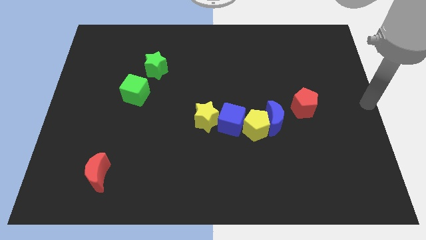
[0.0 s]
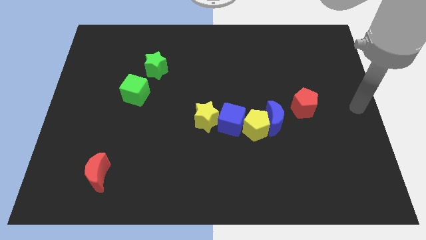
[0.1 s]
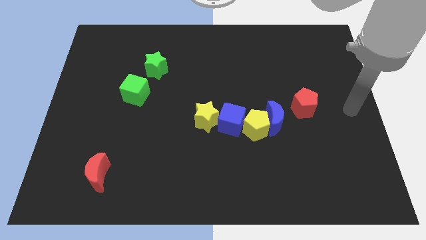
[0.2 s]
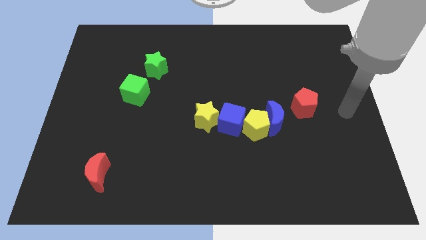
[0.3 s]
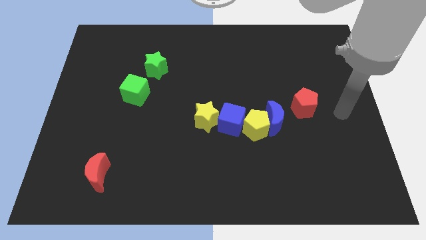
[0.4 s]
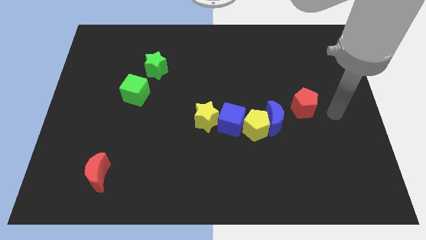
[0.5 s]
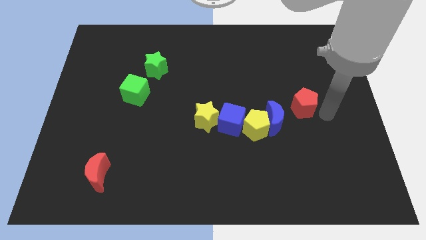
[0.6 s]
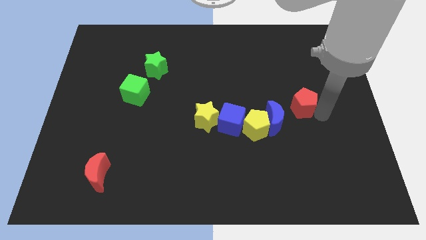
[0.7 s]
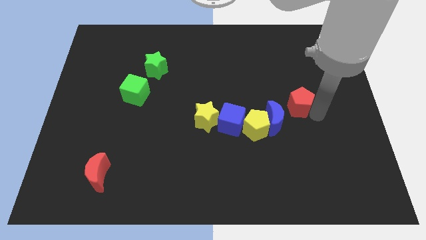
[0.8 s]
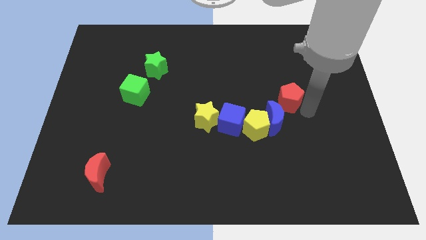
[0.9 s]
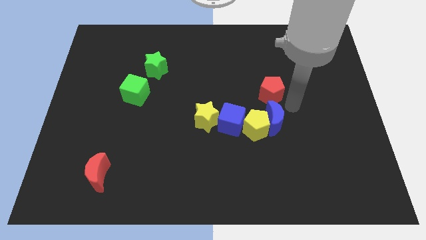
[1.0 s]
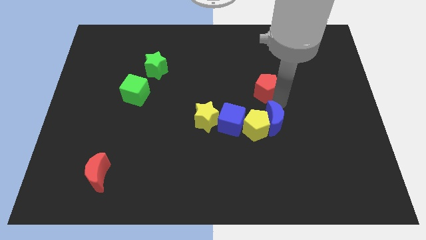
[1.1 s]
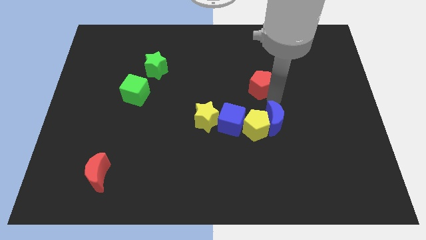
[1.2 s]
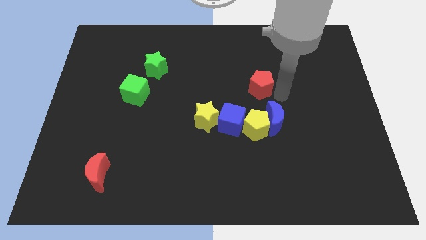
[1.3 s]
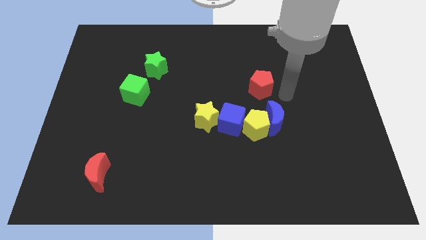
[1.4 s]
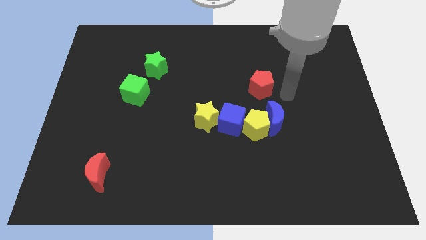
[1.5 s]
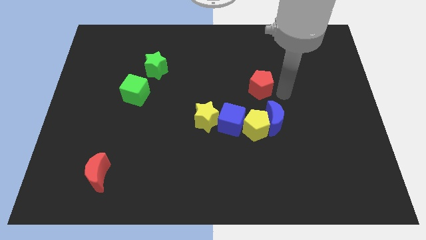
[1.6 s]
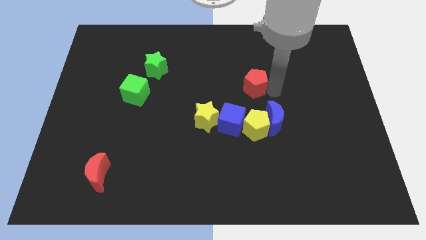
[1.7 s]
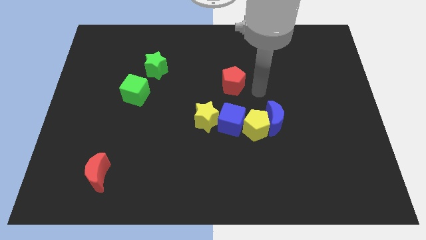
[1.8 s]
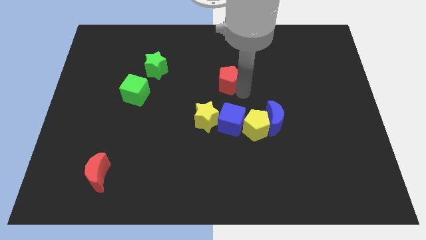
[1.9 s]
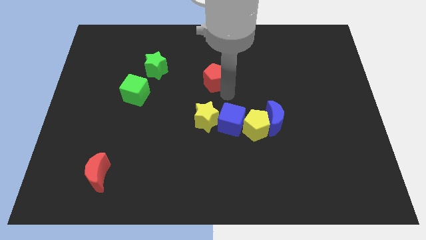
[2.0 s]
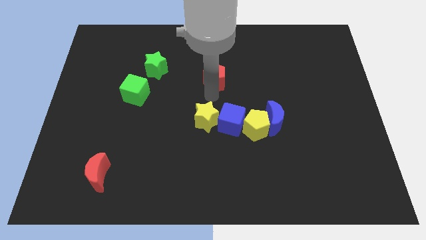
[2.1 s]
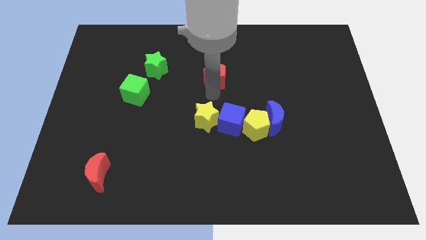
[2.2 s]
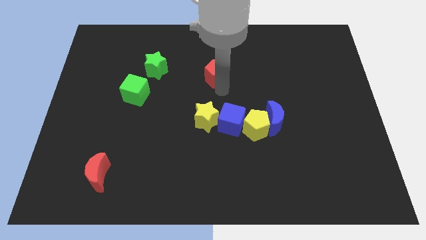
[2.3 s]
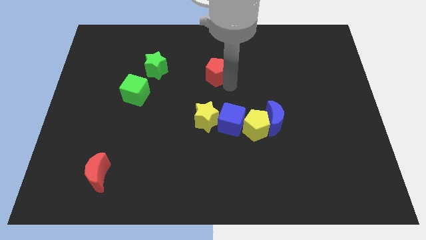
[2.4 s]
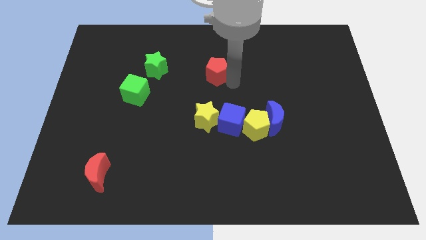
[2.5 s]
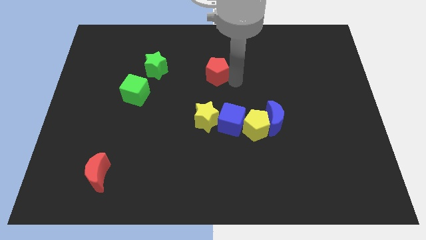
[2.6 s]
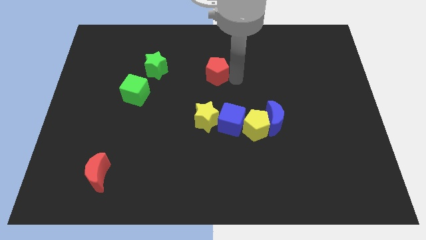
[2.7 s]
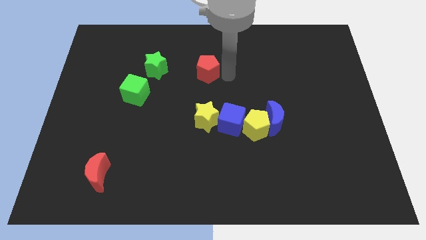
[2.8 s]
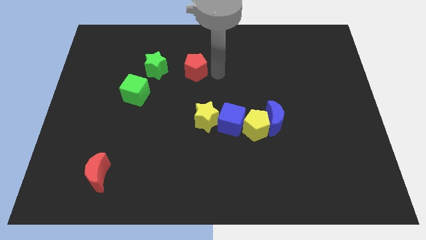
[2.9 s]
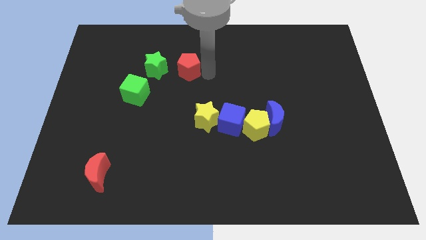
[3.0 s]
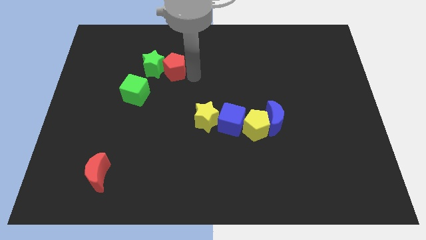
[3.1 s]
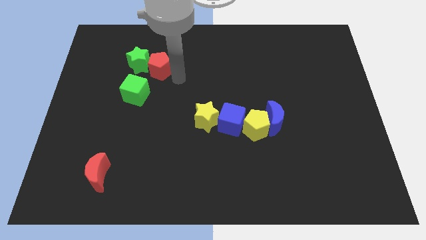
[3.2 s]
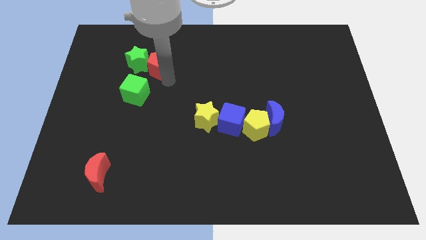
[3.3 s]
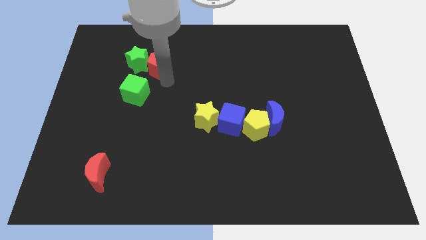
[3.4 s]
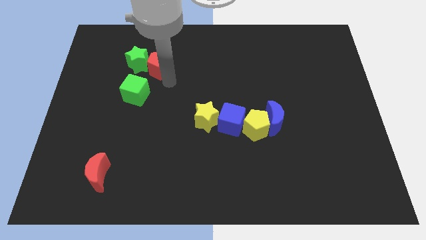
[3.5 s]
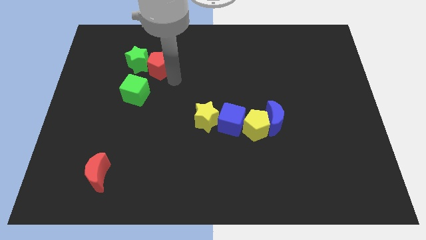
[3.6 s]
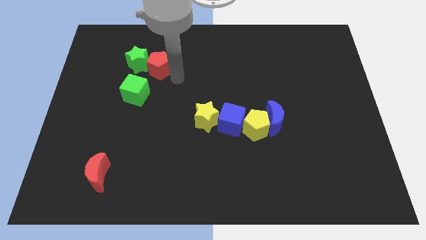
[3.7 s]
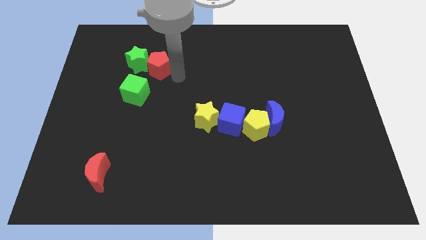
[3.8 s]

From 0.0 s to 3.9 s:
push the red pentagon near into the green star

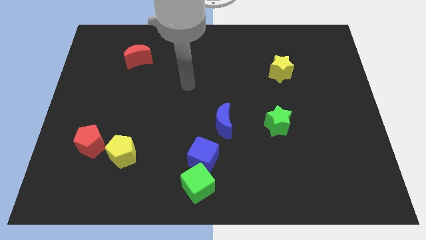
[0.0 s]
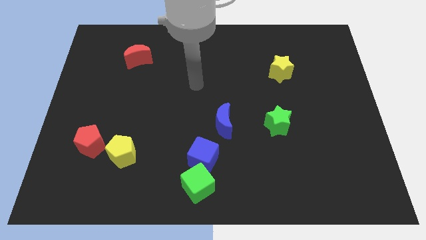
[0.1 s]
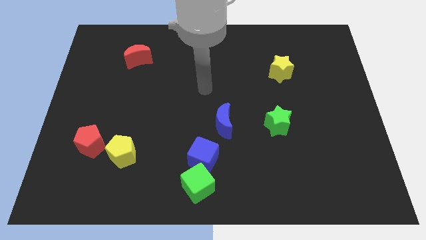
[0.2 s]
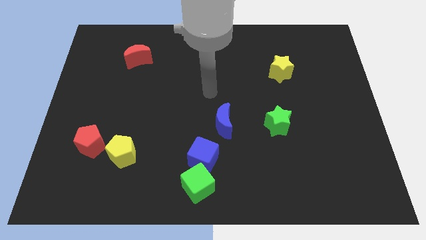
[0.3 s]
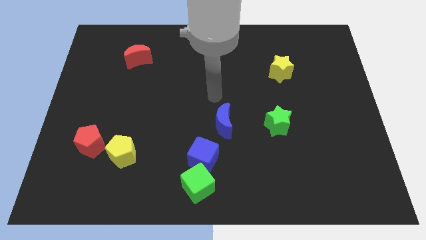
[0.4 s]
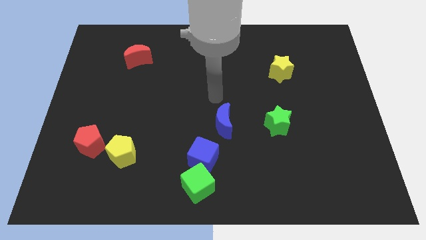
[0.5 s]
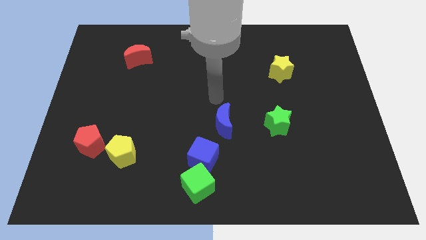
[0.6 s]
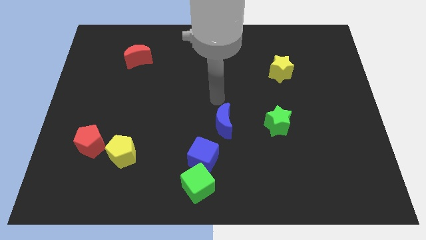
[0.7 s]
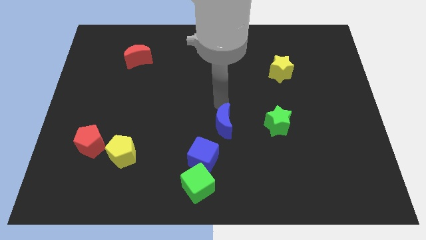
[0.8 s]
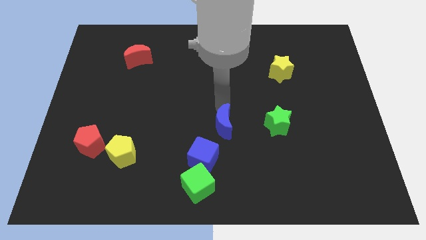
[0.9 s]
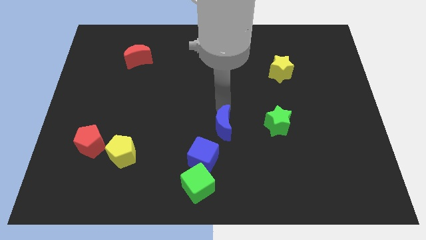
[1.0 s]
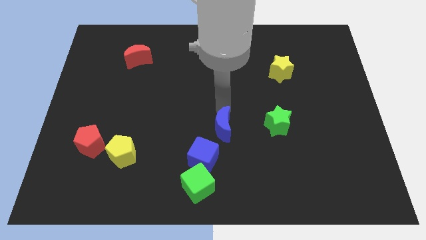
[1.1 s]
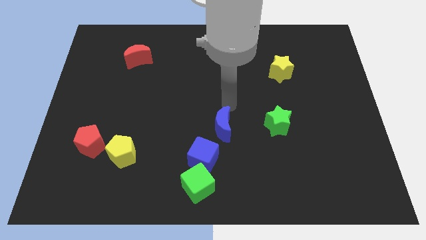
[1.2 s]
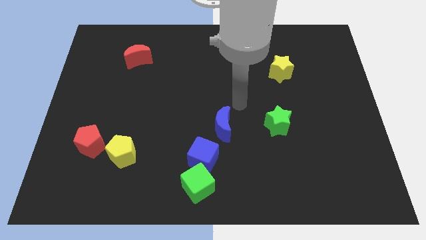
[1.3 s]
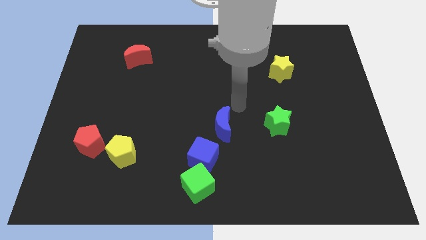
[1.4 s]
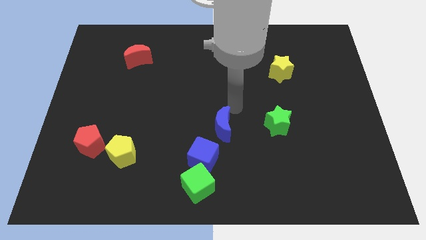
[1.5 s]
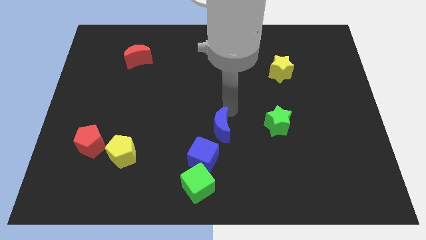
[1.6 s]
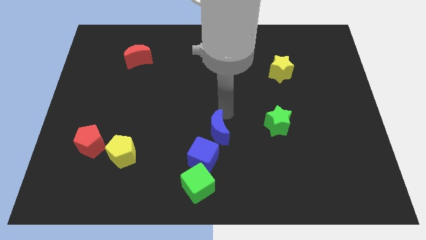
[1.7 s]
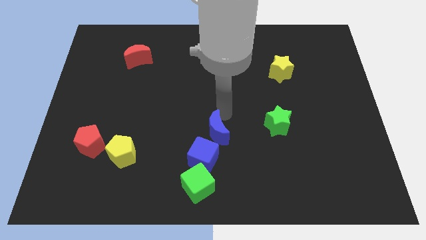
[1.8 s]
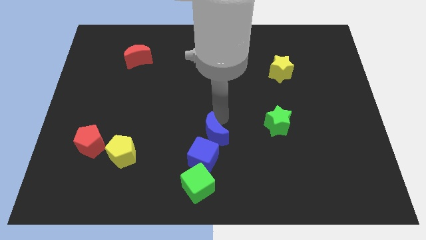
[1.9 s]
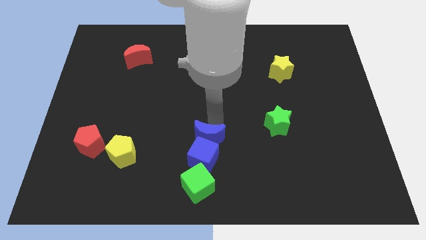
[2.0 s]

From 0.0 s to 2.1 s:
place the blue crescent above the blue cube

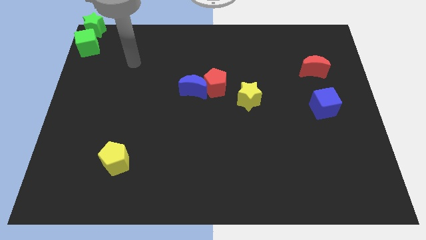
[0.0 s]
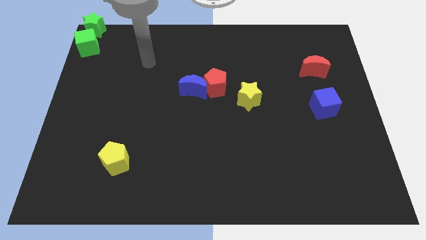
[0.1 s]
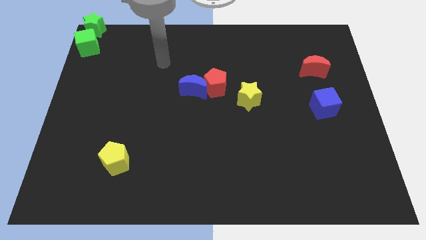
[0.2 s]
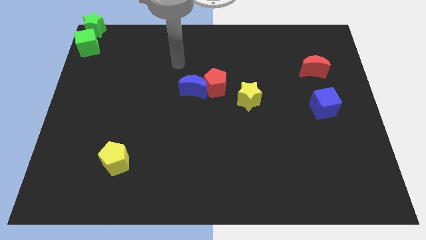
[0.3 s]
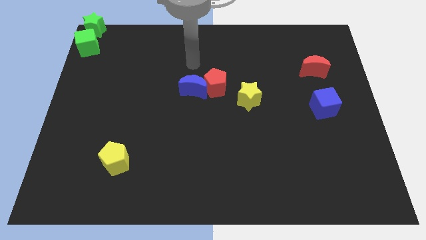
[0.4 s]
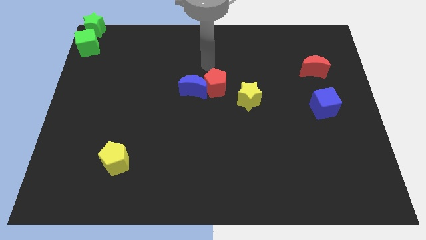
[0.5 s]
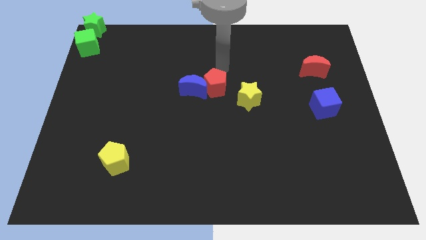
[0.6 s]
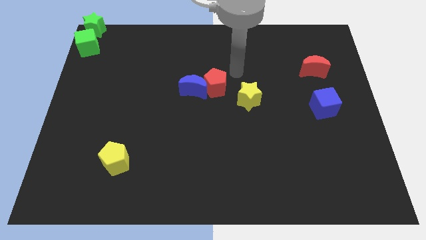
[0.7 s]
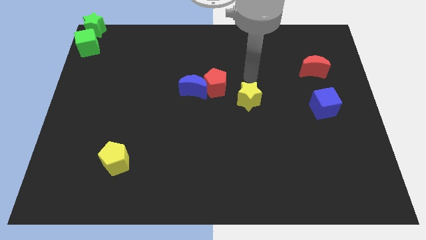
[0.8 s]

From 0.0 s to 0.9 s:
place your hand above the yellow star

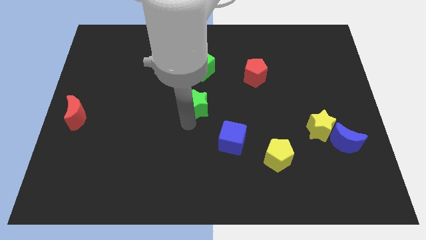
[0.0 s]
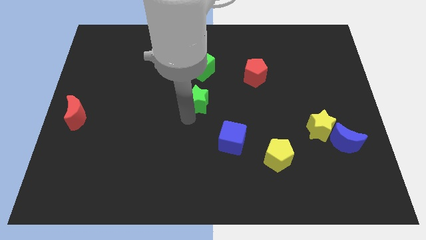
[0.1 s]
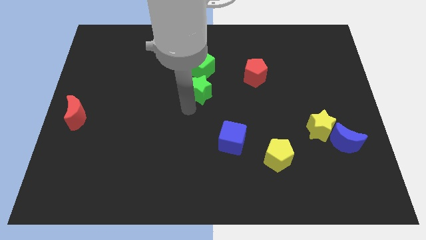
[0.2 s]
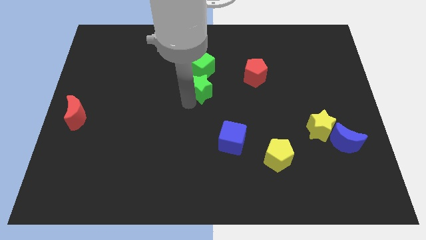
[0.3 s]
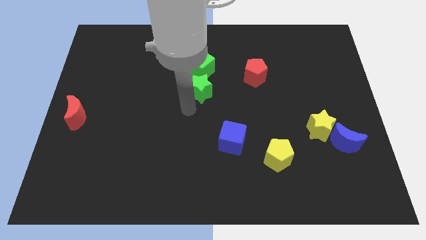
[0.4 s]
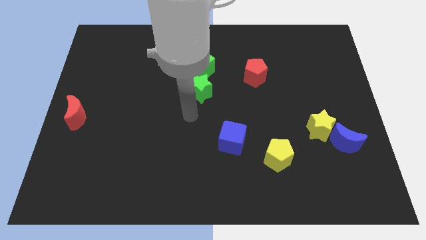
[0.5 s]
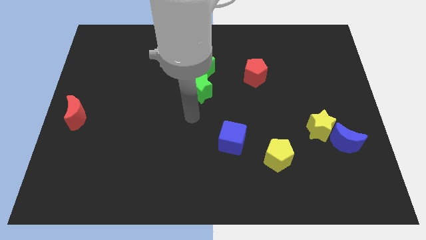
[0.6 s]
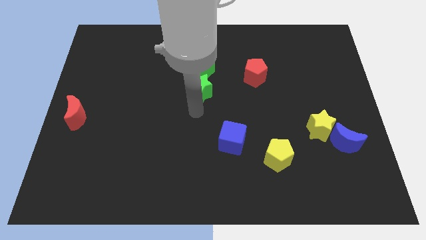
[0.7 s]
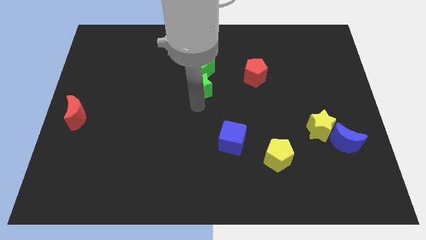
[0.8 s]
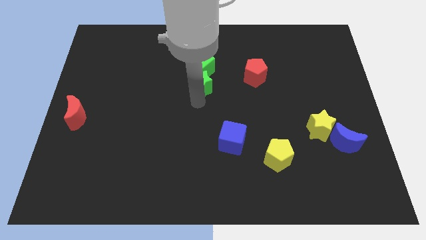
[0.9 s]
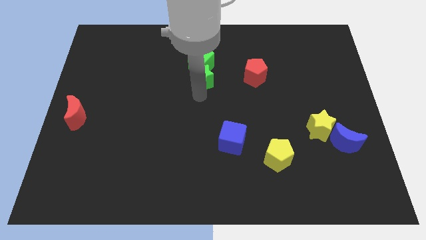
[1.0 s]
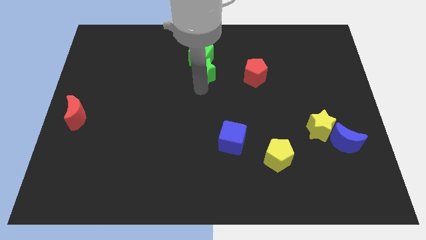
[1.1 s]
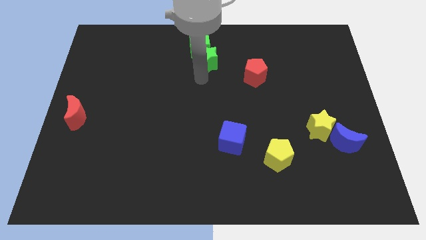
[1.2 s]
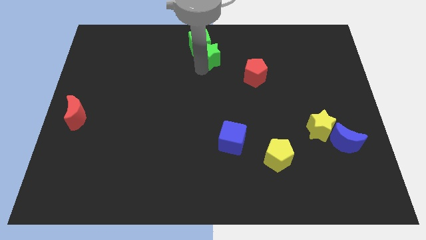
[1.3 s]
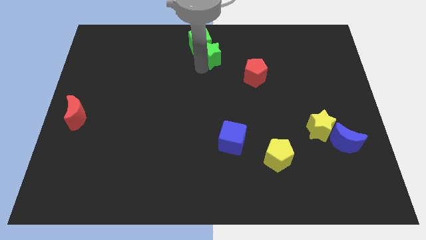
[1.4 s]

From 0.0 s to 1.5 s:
push the green star and green cube towards the top center

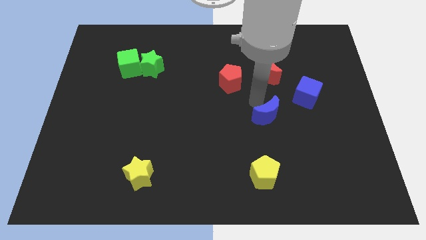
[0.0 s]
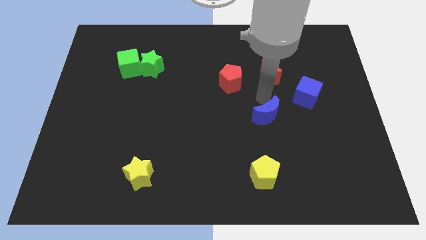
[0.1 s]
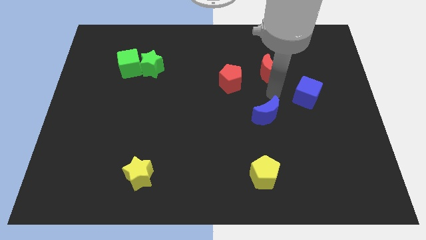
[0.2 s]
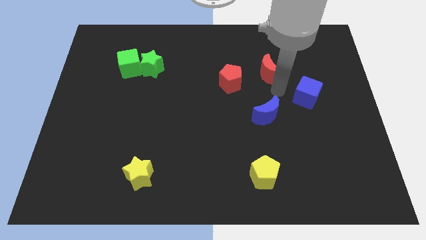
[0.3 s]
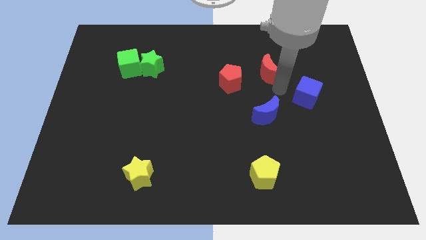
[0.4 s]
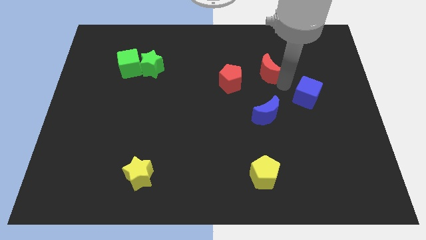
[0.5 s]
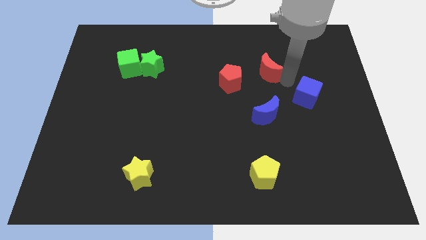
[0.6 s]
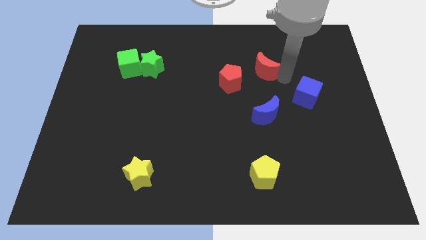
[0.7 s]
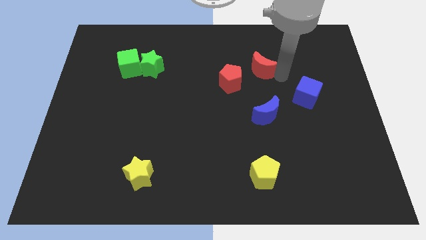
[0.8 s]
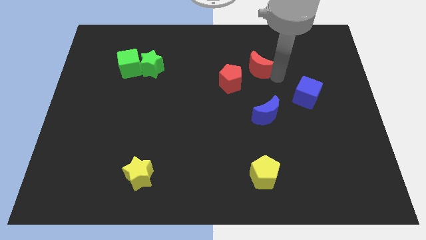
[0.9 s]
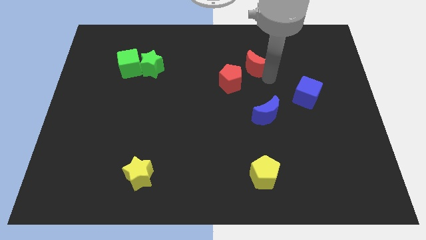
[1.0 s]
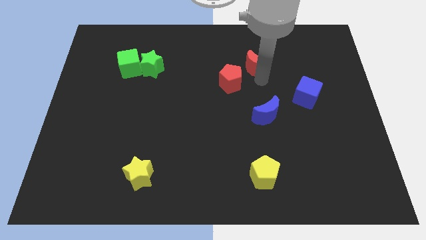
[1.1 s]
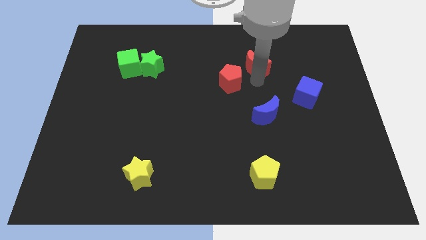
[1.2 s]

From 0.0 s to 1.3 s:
push the red crescent towards the top side of the board
